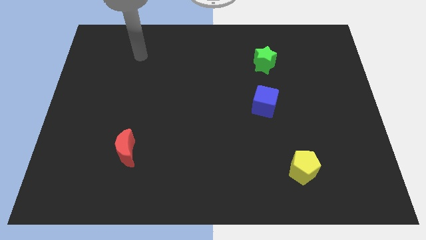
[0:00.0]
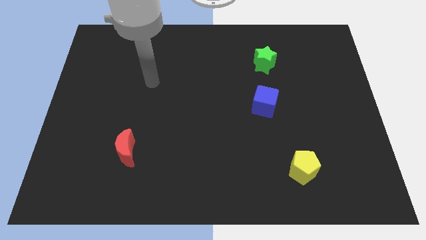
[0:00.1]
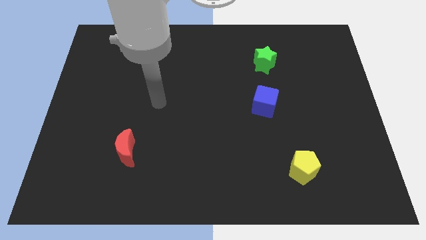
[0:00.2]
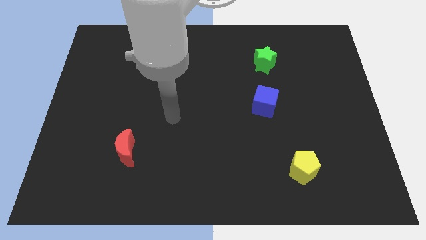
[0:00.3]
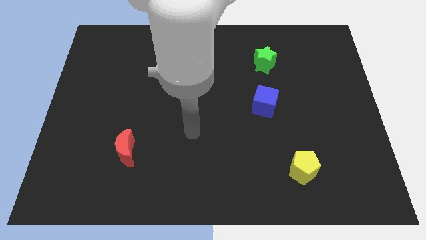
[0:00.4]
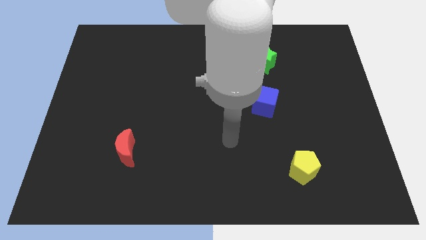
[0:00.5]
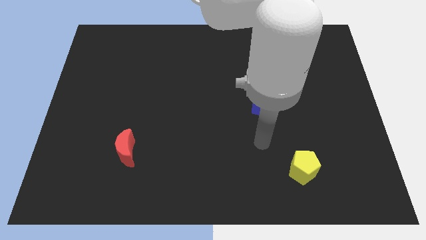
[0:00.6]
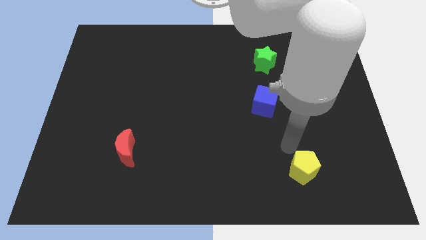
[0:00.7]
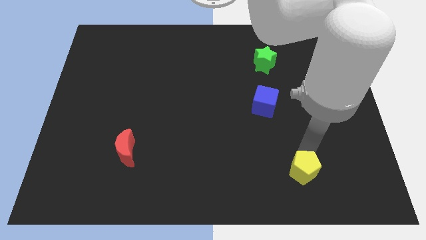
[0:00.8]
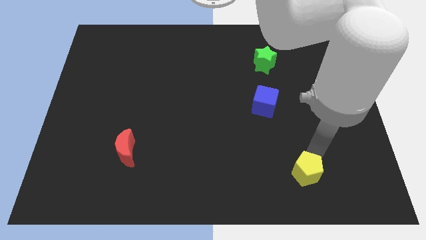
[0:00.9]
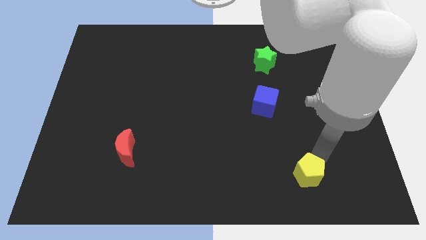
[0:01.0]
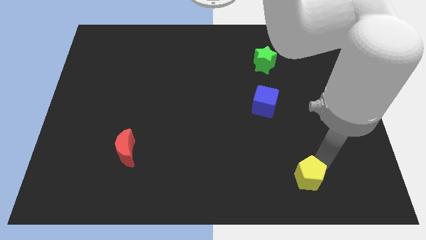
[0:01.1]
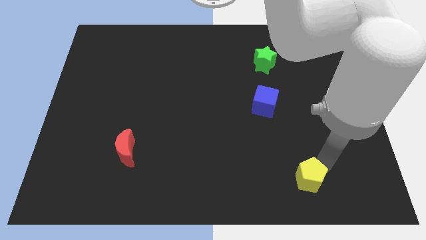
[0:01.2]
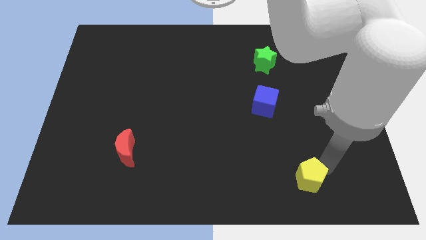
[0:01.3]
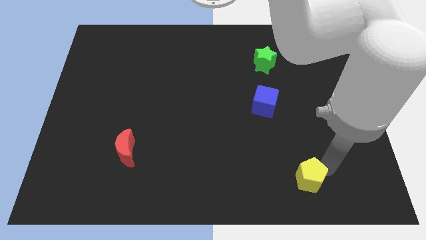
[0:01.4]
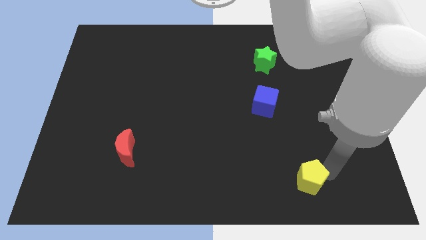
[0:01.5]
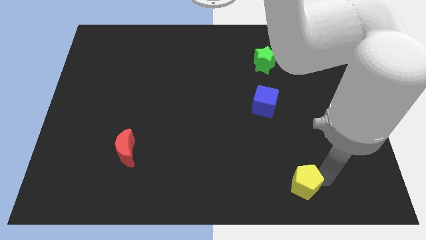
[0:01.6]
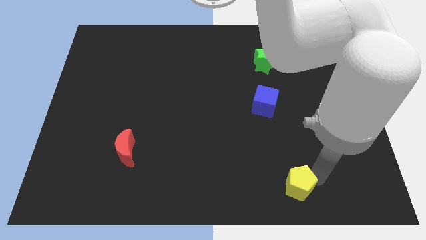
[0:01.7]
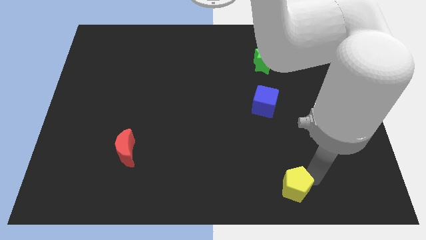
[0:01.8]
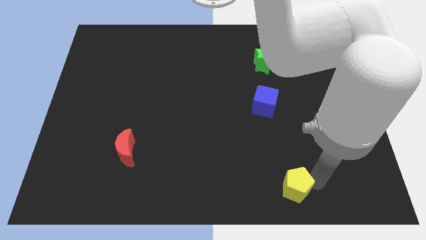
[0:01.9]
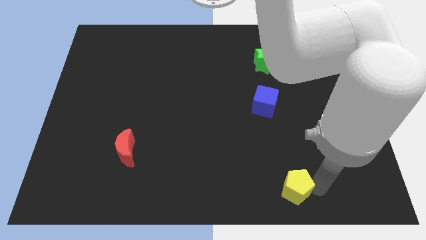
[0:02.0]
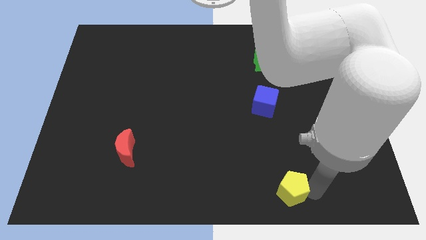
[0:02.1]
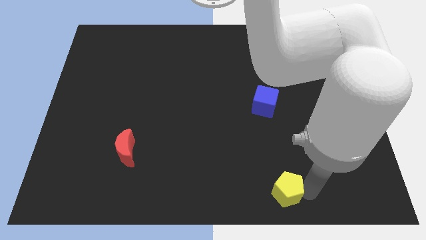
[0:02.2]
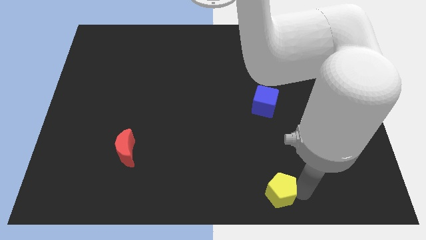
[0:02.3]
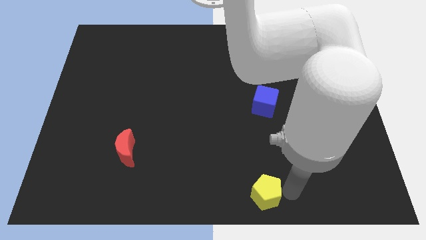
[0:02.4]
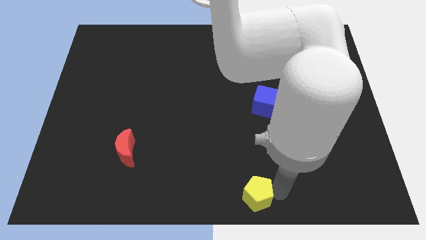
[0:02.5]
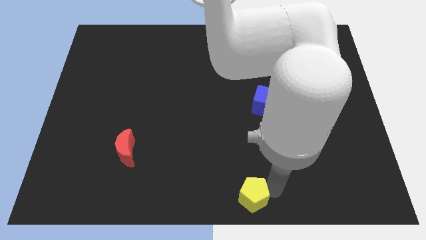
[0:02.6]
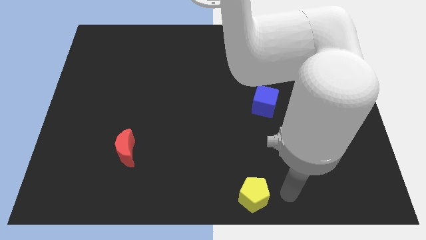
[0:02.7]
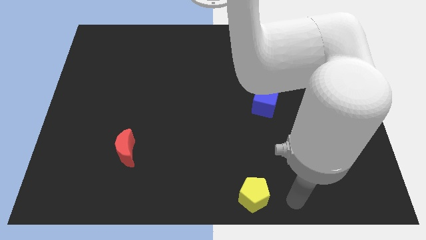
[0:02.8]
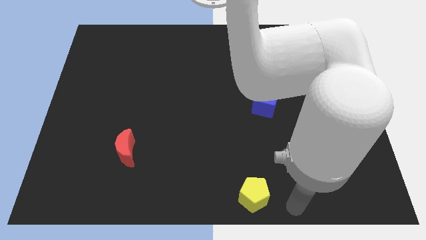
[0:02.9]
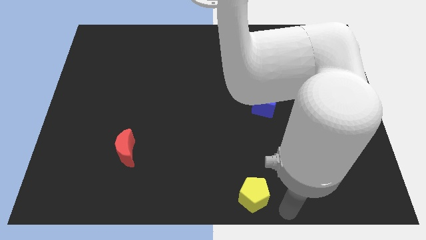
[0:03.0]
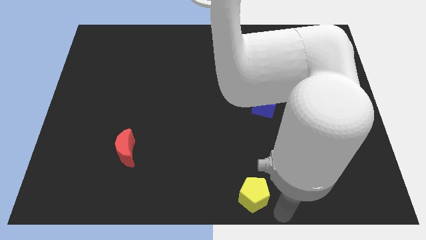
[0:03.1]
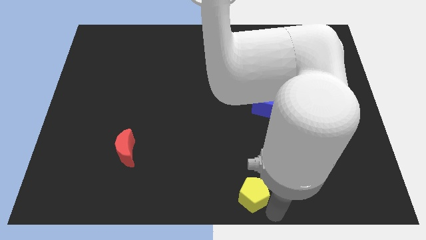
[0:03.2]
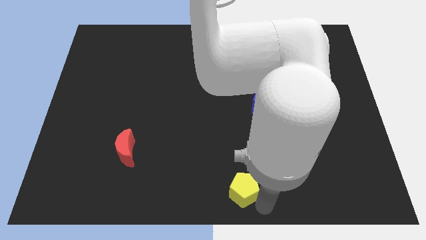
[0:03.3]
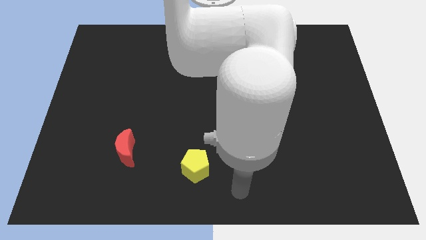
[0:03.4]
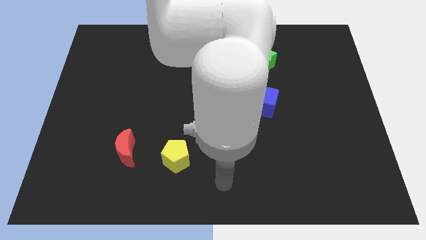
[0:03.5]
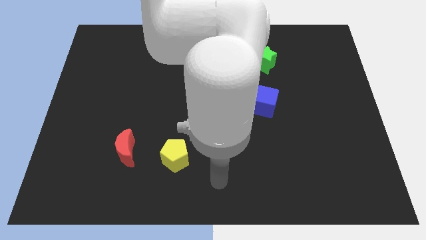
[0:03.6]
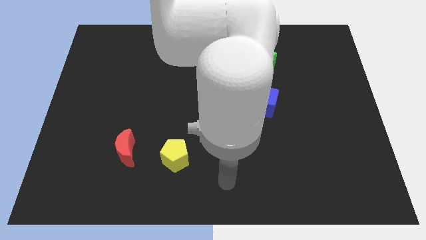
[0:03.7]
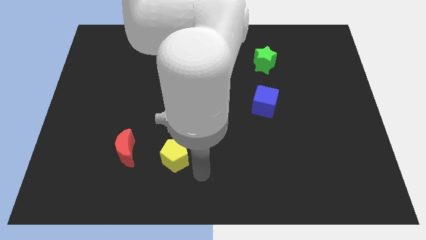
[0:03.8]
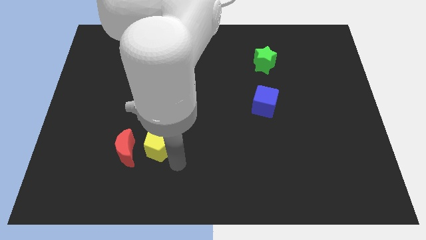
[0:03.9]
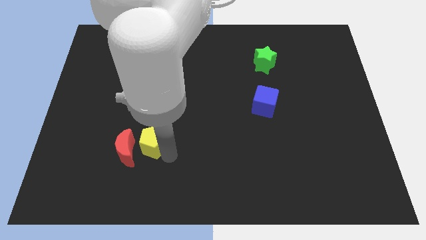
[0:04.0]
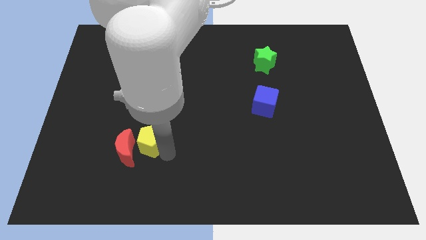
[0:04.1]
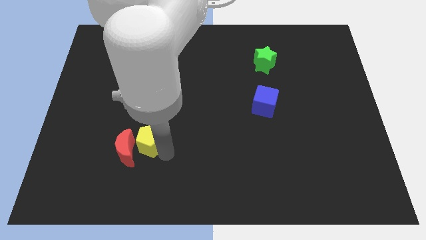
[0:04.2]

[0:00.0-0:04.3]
move the pentagon to the red block

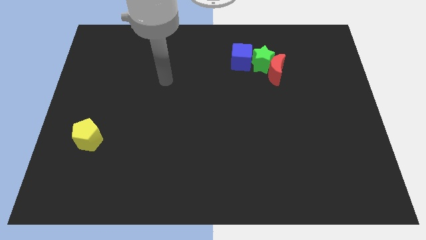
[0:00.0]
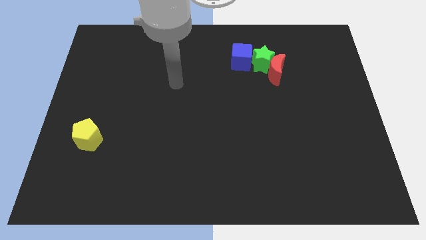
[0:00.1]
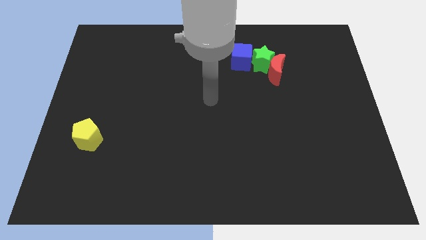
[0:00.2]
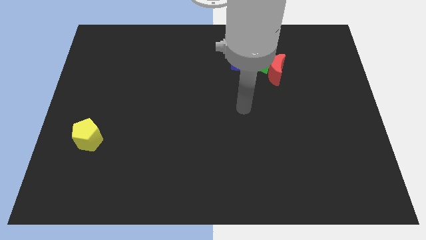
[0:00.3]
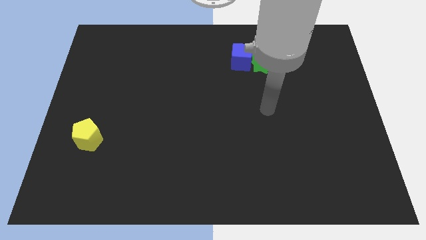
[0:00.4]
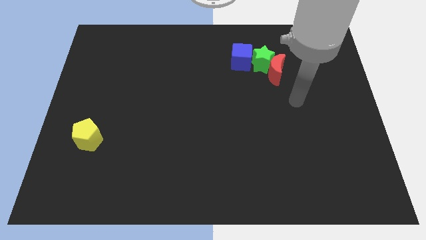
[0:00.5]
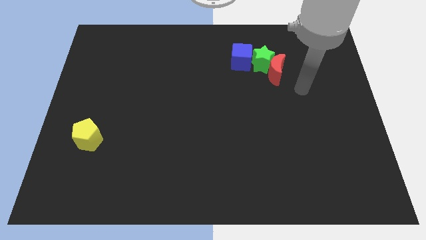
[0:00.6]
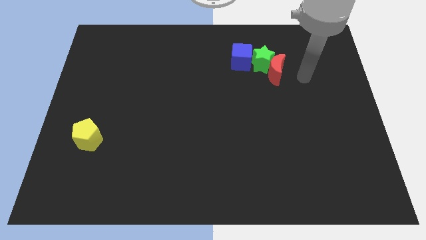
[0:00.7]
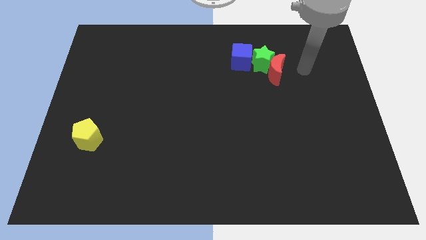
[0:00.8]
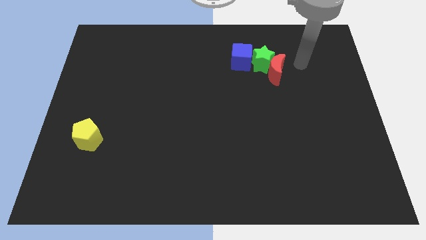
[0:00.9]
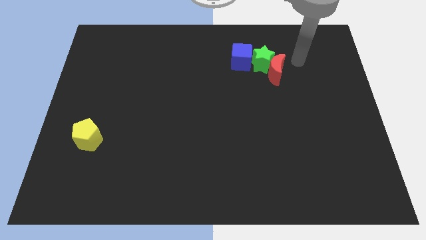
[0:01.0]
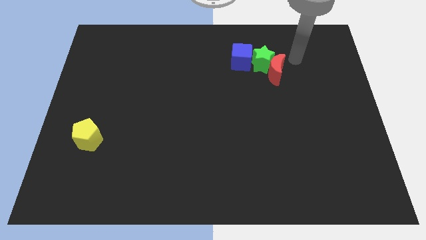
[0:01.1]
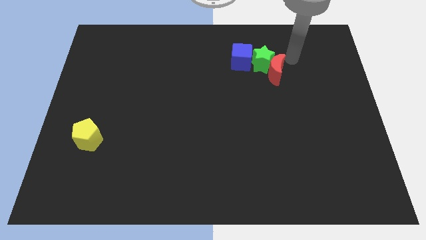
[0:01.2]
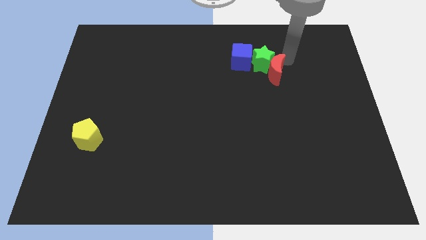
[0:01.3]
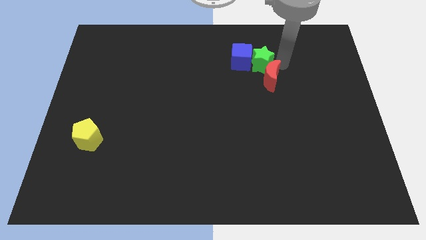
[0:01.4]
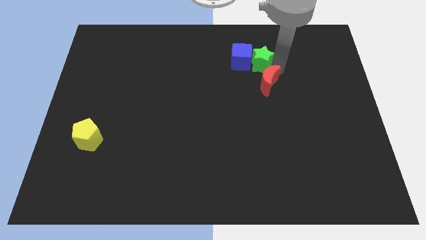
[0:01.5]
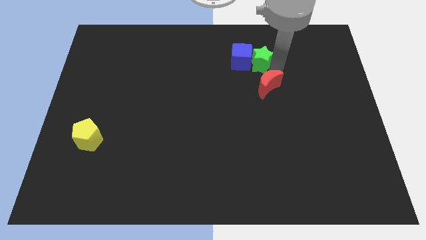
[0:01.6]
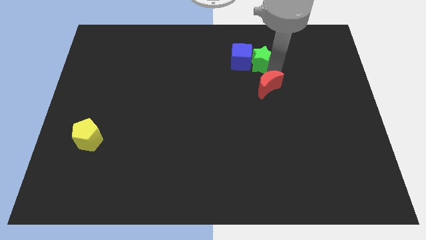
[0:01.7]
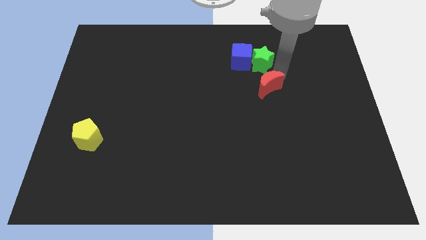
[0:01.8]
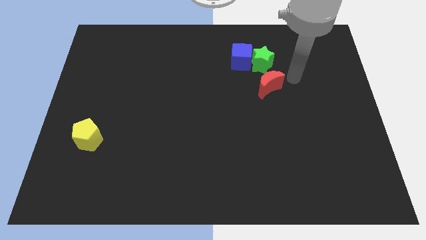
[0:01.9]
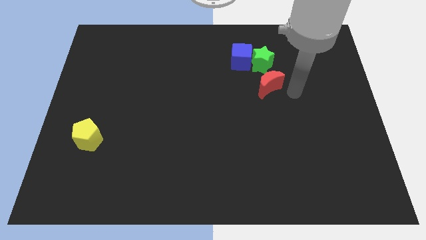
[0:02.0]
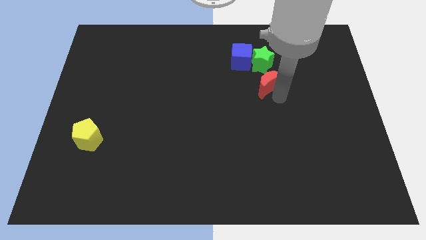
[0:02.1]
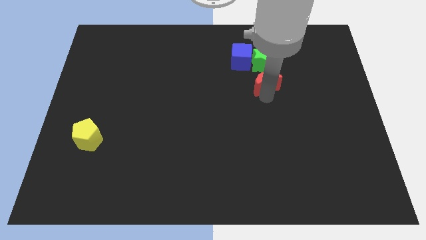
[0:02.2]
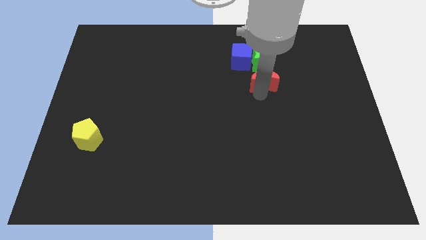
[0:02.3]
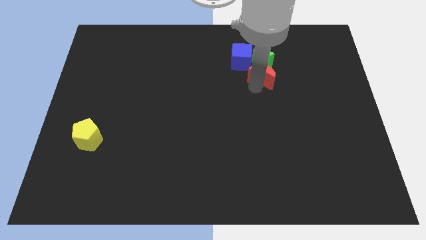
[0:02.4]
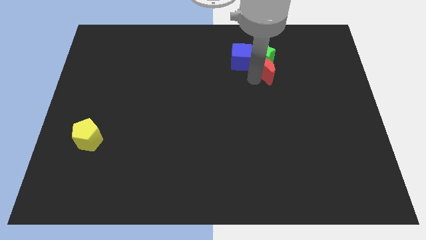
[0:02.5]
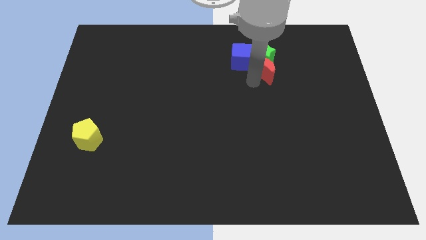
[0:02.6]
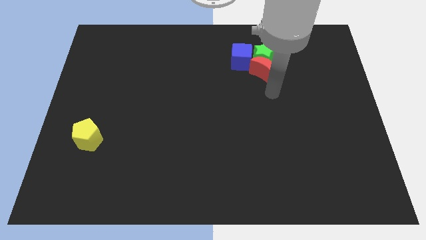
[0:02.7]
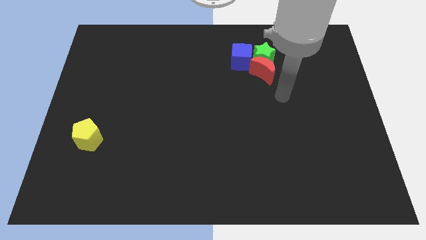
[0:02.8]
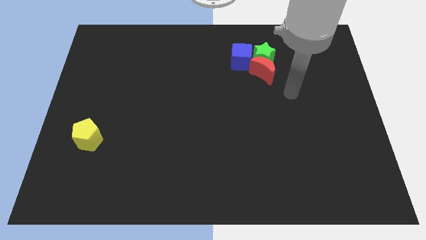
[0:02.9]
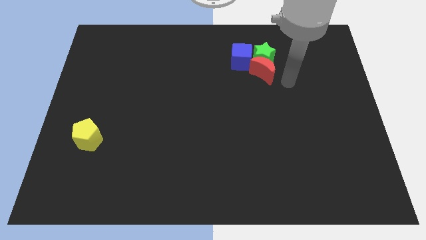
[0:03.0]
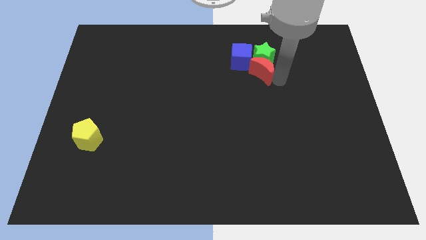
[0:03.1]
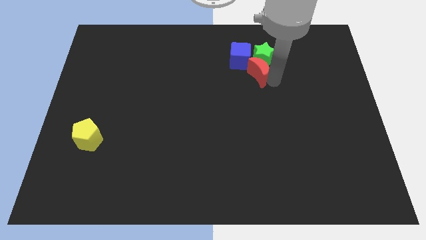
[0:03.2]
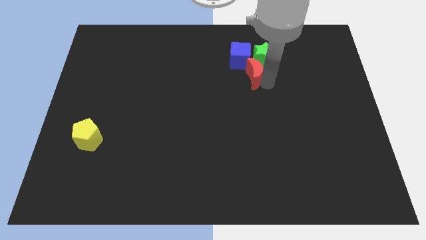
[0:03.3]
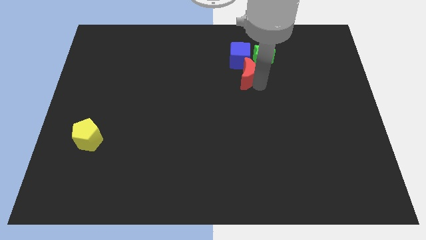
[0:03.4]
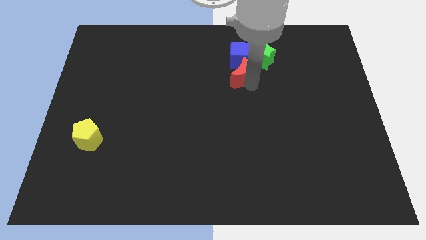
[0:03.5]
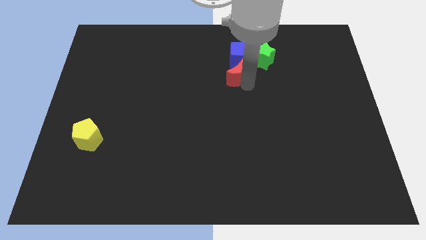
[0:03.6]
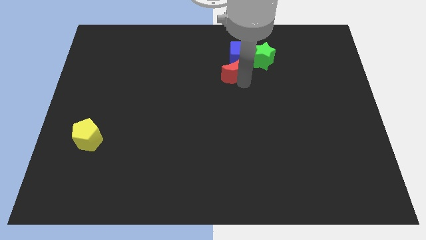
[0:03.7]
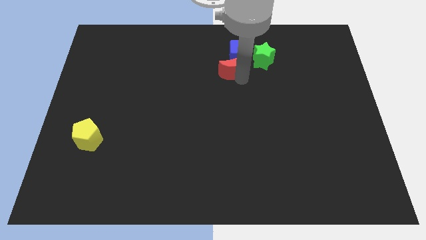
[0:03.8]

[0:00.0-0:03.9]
move the red block close to the blue block

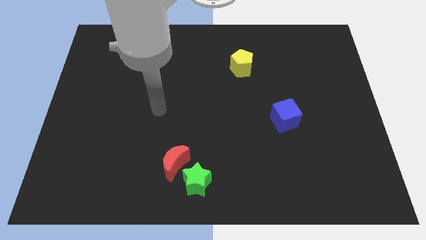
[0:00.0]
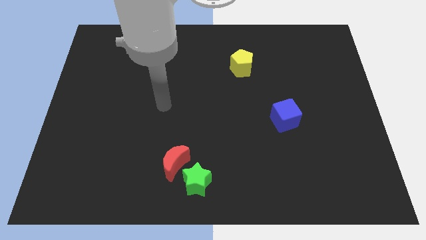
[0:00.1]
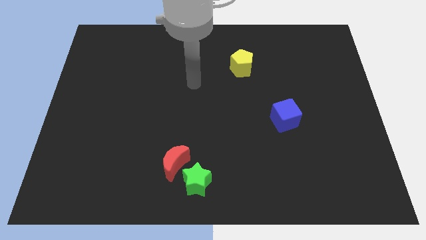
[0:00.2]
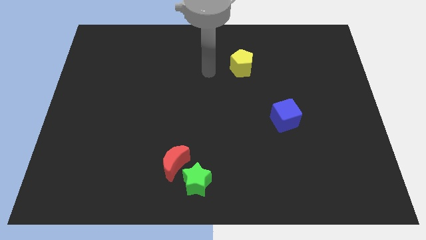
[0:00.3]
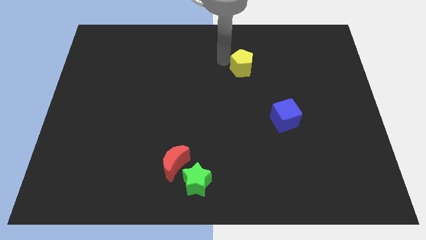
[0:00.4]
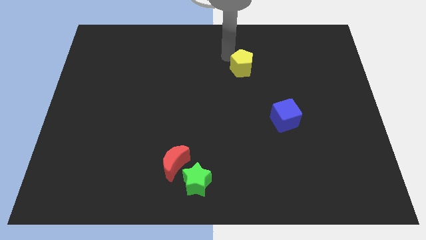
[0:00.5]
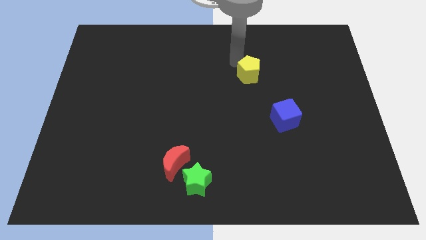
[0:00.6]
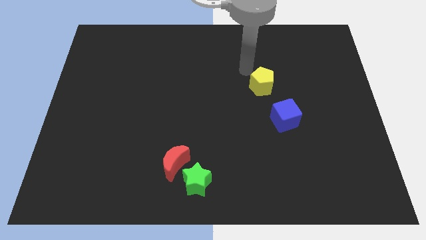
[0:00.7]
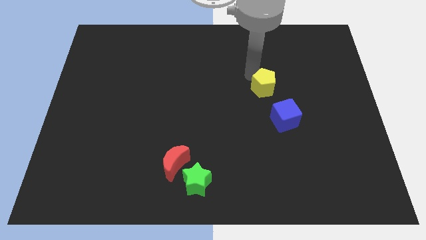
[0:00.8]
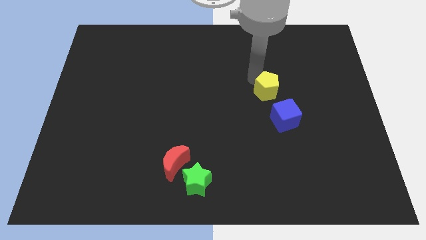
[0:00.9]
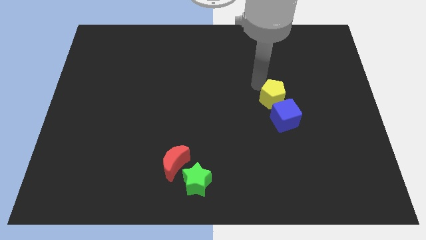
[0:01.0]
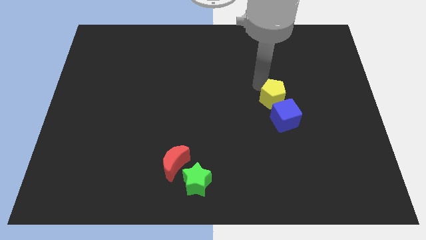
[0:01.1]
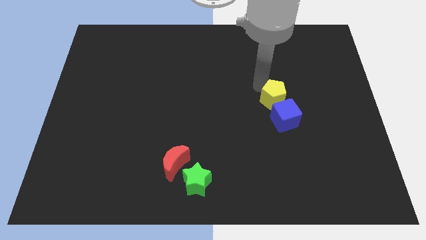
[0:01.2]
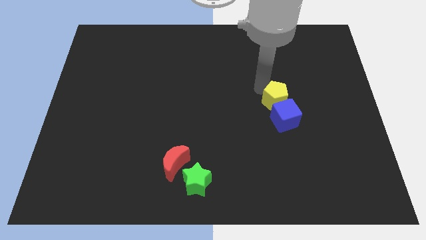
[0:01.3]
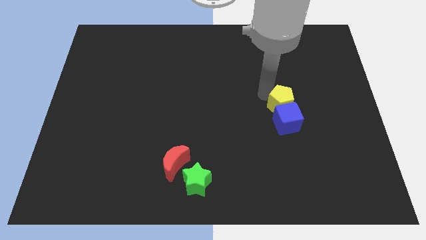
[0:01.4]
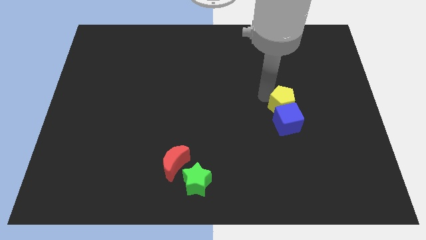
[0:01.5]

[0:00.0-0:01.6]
slide the pentagon to the blue cube
